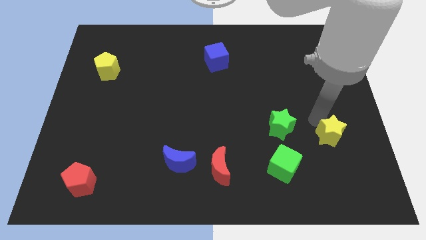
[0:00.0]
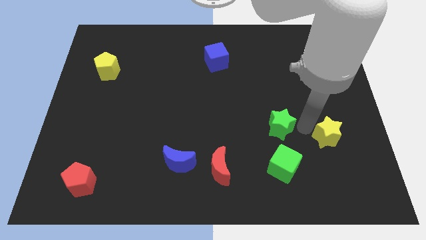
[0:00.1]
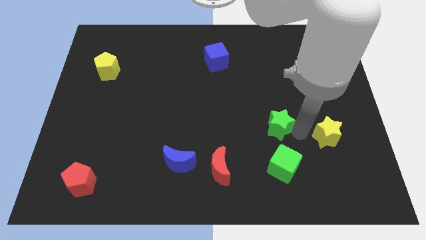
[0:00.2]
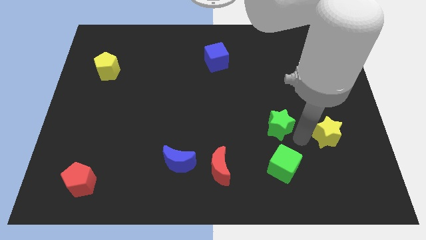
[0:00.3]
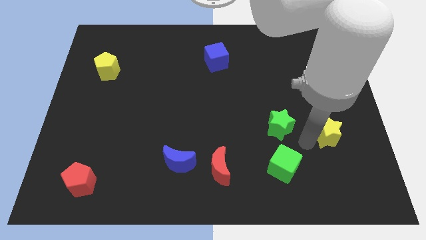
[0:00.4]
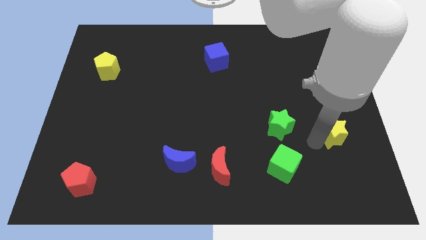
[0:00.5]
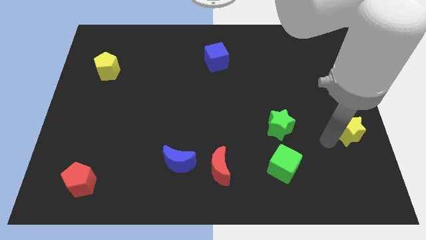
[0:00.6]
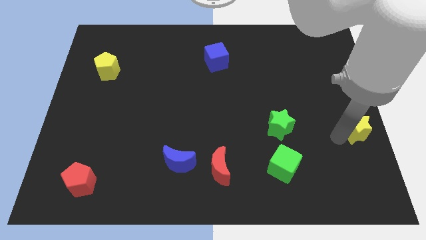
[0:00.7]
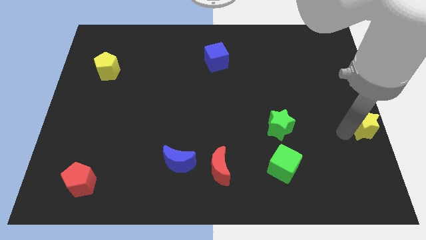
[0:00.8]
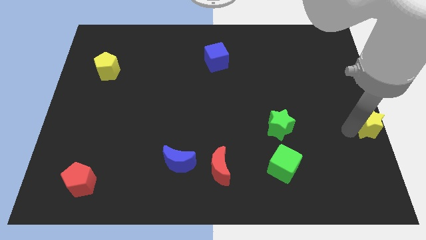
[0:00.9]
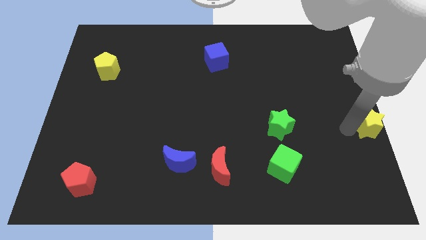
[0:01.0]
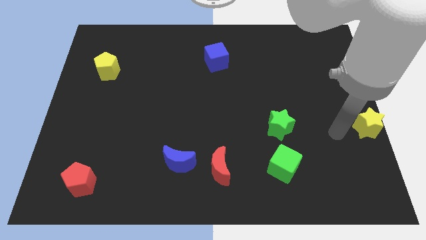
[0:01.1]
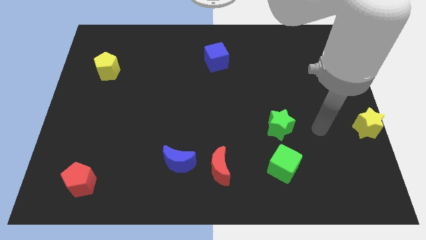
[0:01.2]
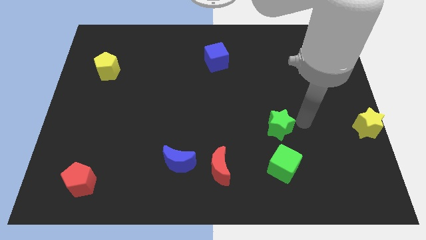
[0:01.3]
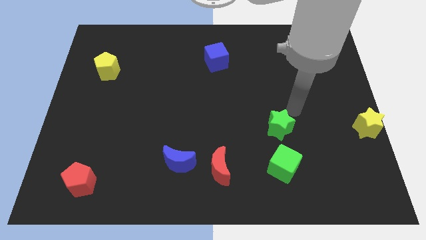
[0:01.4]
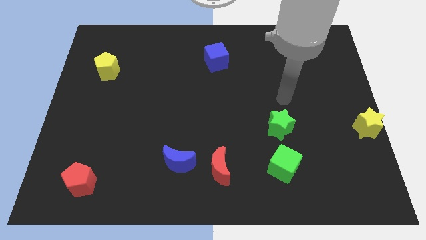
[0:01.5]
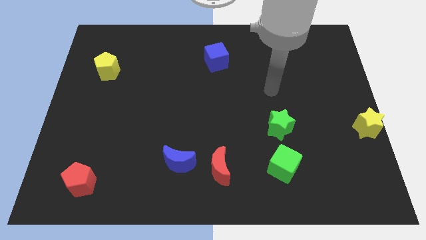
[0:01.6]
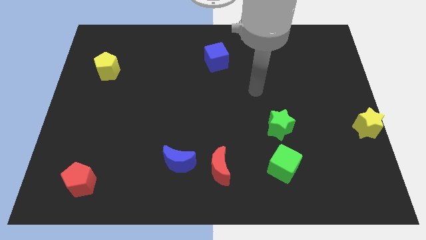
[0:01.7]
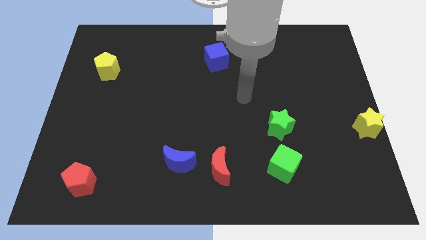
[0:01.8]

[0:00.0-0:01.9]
push the yellow star towards the center right of the board

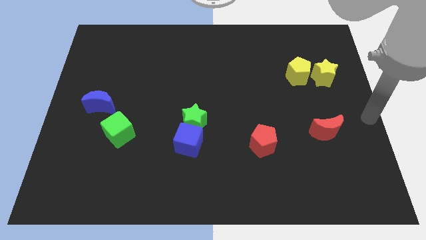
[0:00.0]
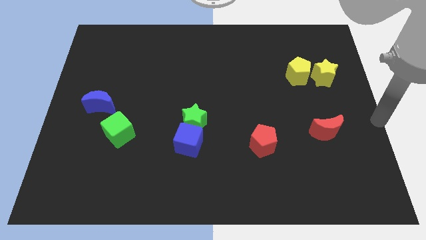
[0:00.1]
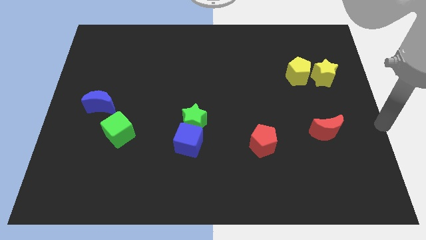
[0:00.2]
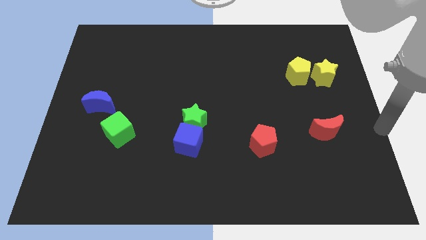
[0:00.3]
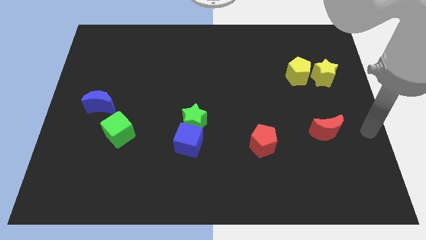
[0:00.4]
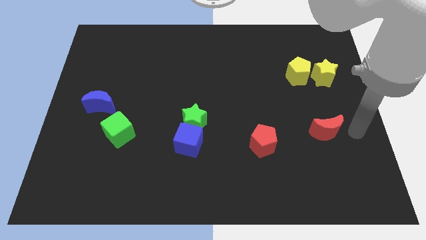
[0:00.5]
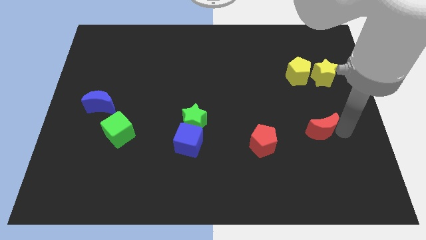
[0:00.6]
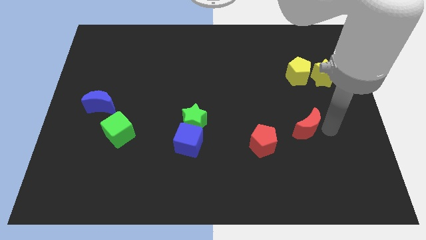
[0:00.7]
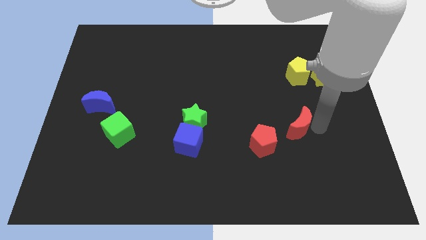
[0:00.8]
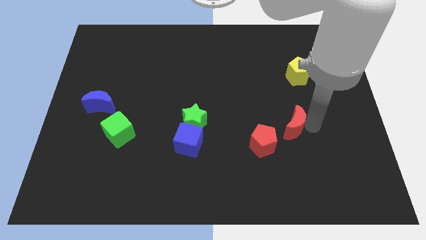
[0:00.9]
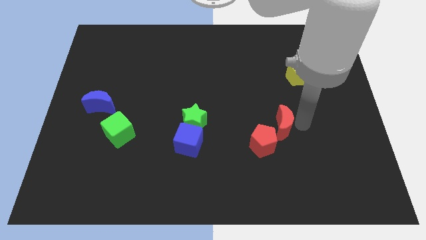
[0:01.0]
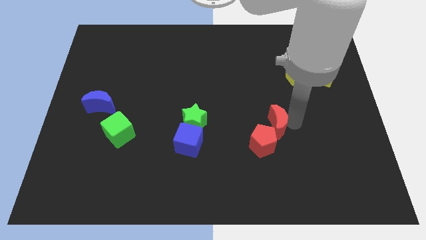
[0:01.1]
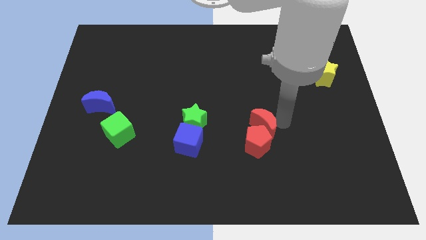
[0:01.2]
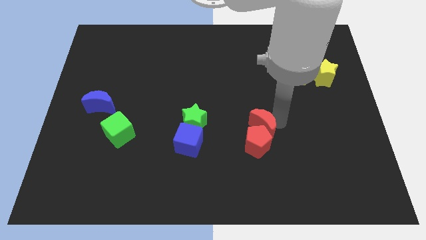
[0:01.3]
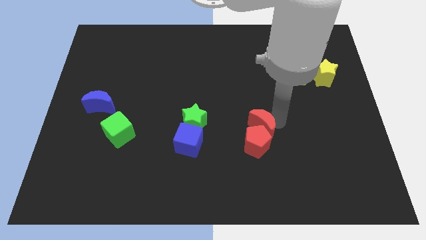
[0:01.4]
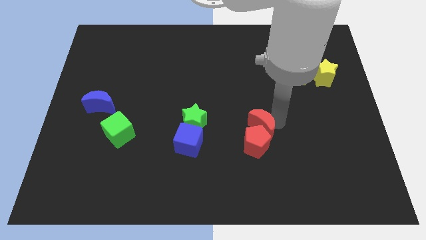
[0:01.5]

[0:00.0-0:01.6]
push the red crescent to the top of red pentagon

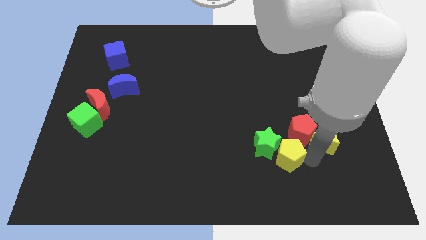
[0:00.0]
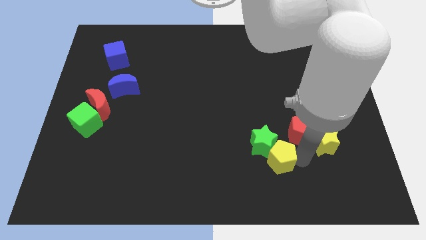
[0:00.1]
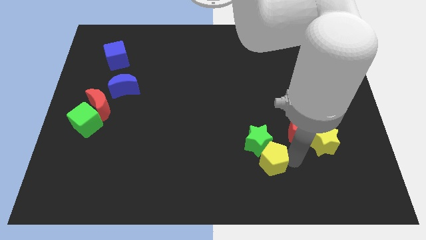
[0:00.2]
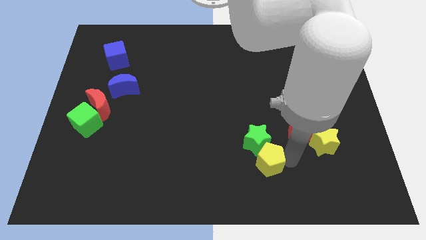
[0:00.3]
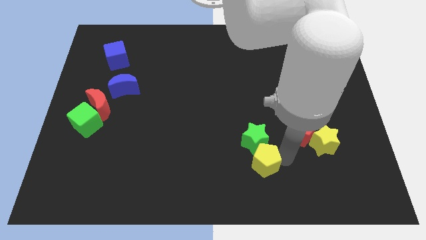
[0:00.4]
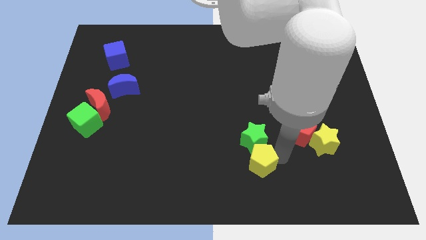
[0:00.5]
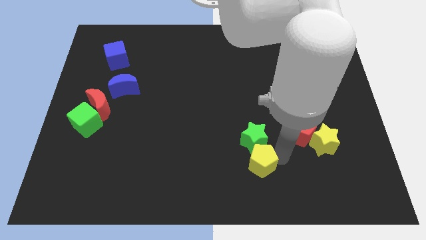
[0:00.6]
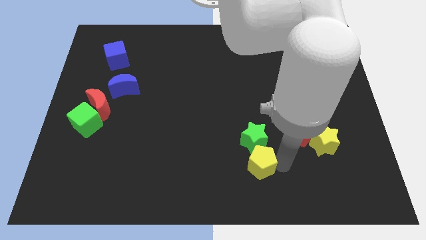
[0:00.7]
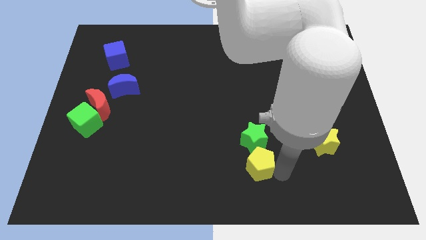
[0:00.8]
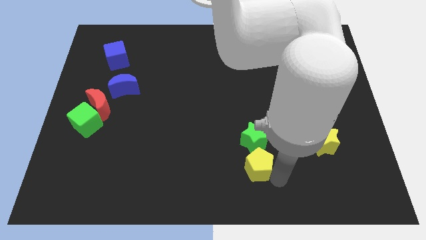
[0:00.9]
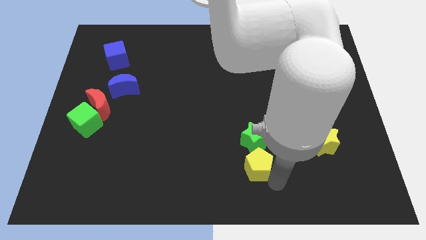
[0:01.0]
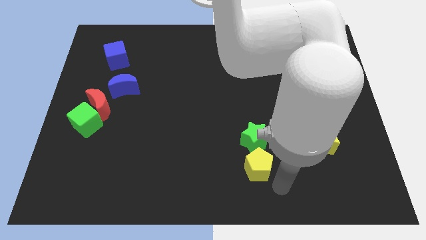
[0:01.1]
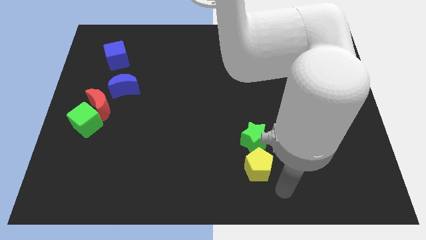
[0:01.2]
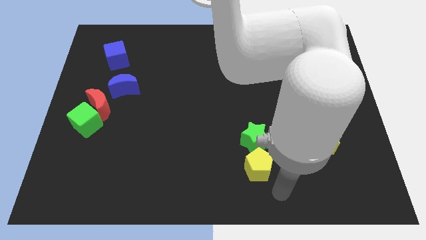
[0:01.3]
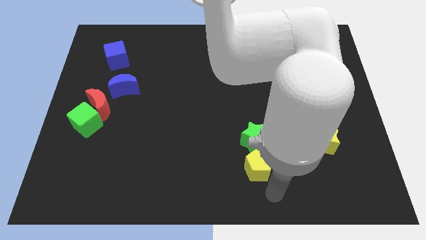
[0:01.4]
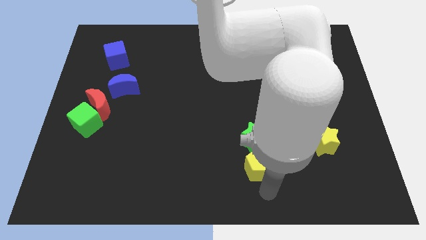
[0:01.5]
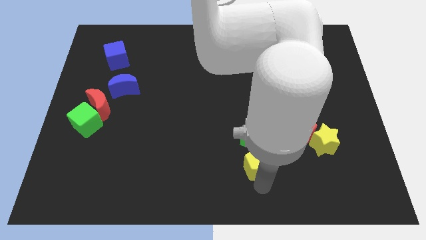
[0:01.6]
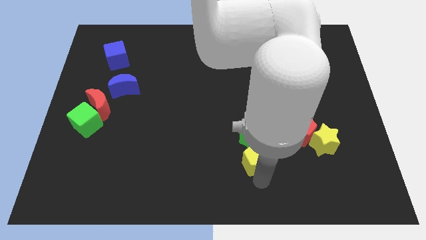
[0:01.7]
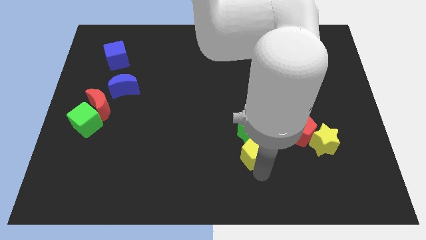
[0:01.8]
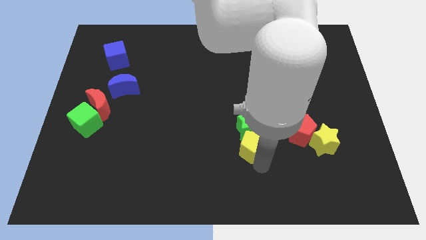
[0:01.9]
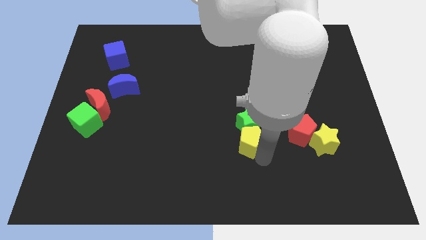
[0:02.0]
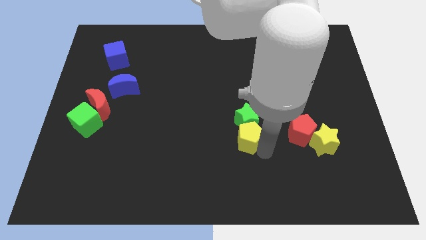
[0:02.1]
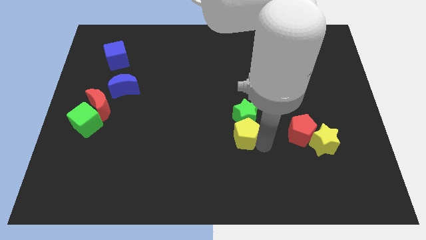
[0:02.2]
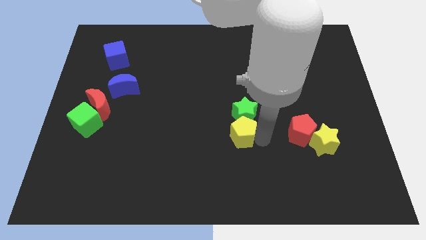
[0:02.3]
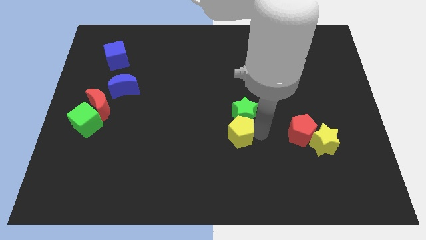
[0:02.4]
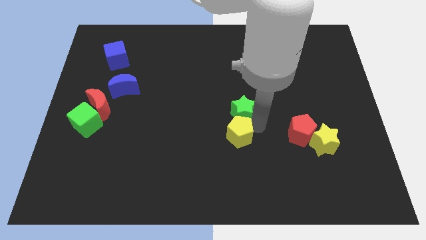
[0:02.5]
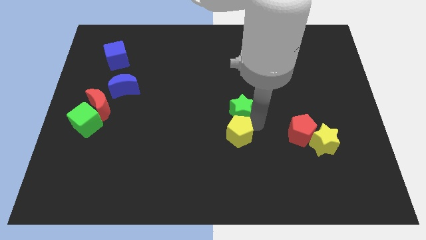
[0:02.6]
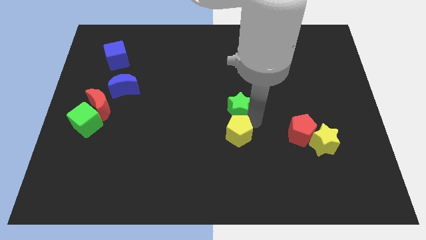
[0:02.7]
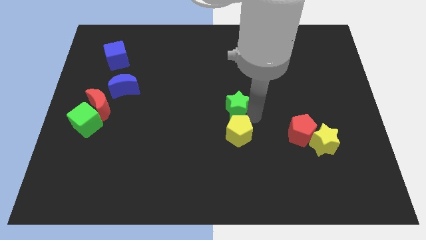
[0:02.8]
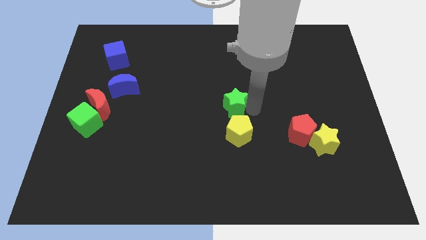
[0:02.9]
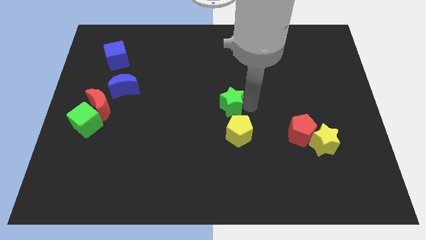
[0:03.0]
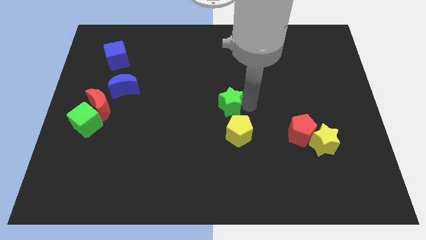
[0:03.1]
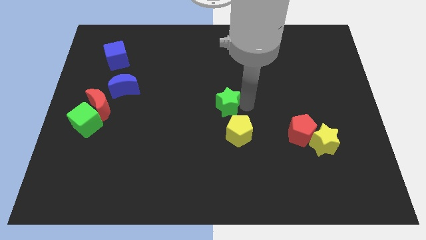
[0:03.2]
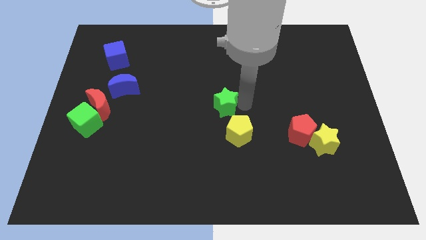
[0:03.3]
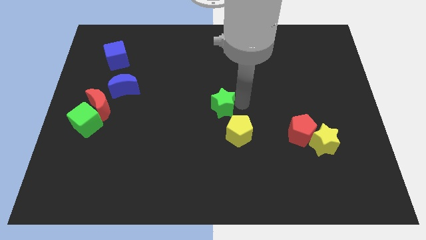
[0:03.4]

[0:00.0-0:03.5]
push the yellow pentagon and green star towards center

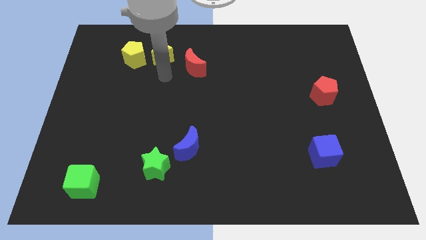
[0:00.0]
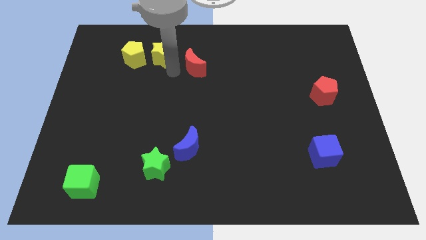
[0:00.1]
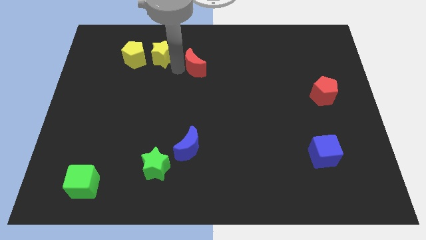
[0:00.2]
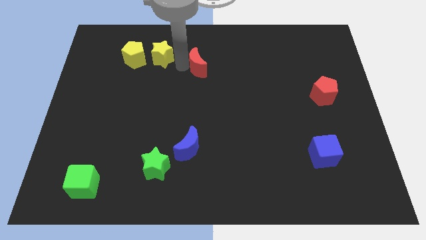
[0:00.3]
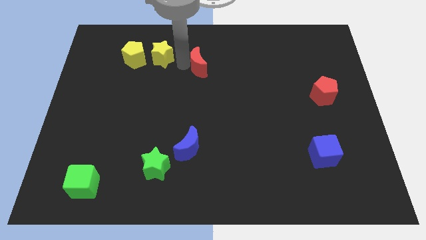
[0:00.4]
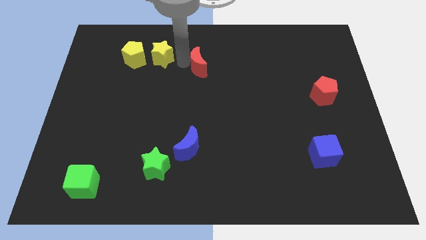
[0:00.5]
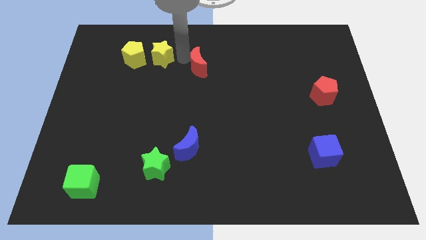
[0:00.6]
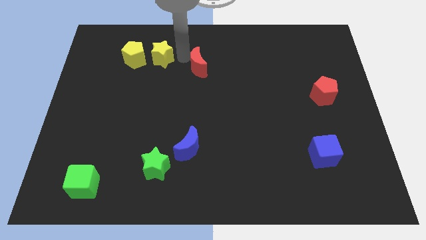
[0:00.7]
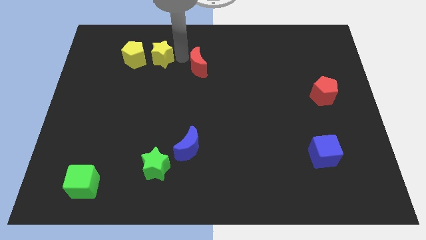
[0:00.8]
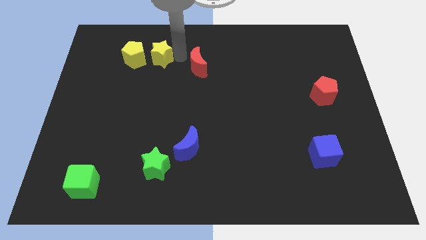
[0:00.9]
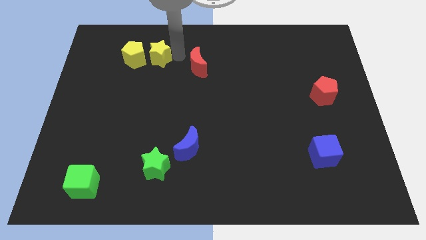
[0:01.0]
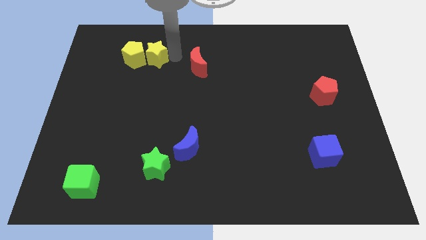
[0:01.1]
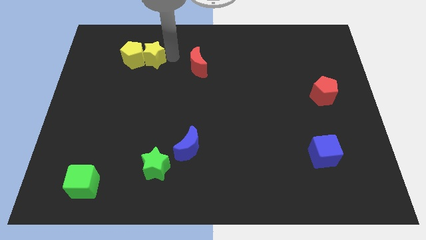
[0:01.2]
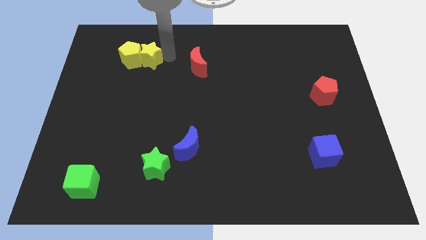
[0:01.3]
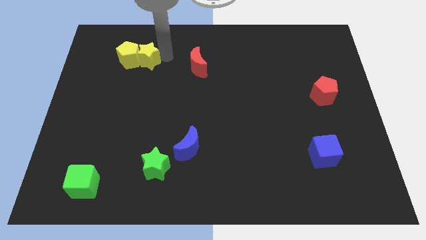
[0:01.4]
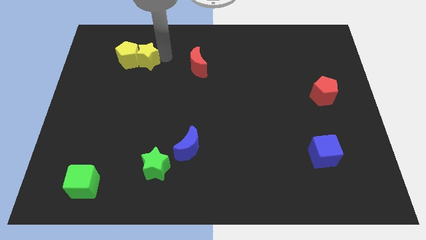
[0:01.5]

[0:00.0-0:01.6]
move yellow star into yellow pentagon

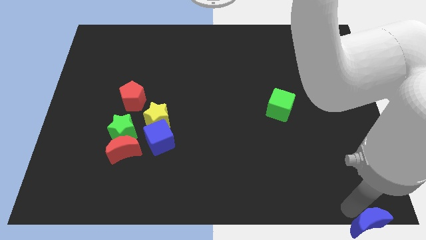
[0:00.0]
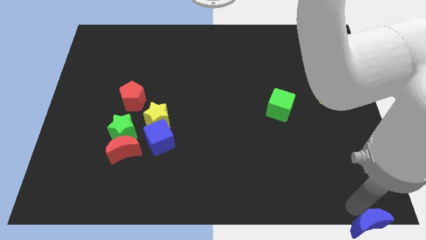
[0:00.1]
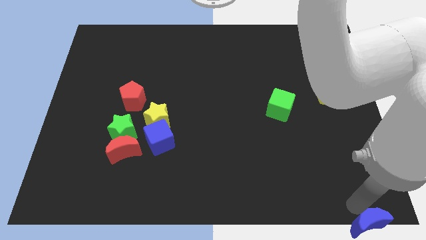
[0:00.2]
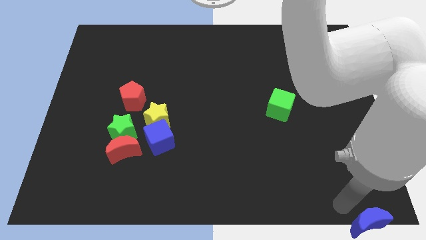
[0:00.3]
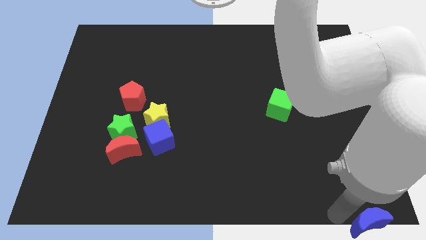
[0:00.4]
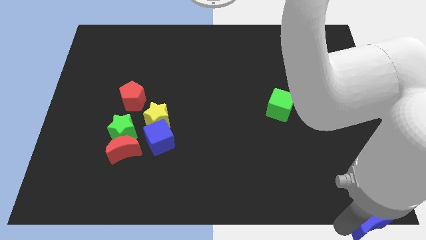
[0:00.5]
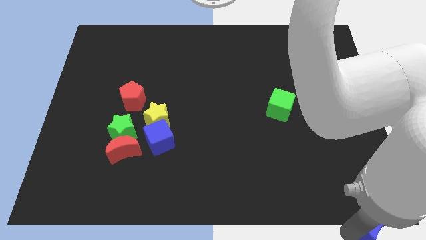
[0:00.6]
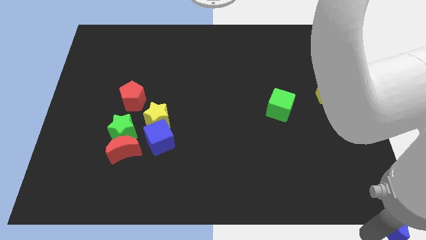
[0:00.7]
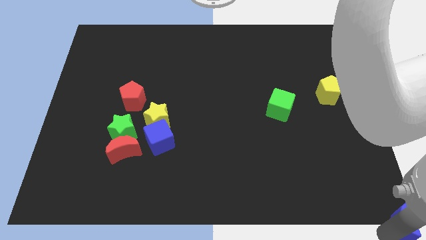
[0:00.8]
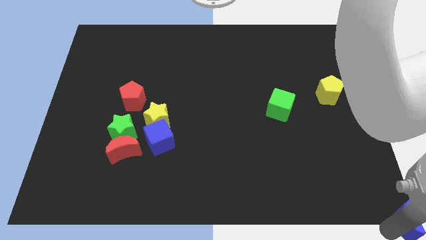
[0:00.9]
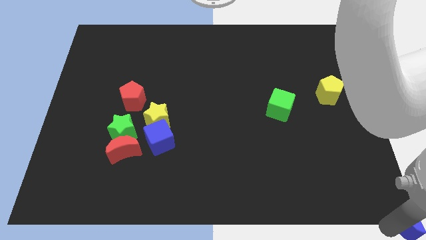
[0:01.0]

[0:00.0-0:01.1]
push the blue moon to the bottom right of the board
